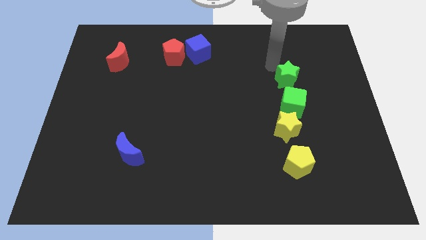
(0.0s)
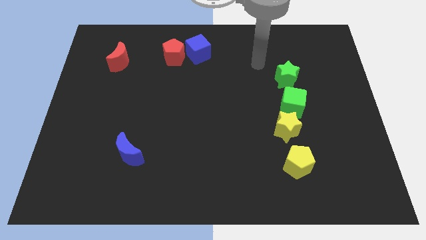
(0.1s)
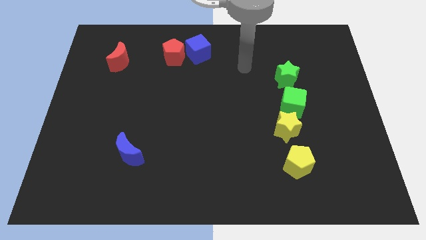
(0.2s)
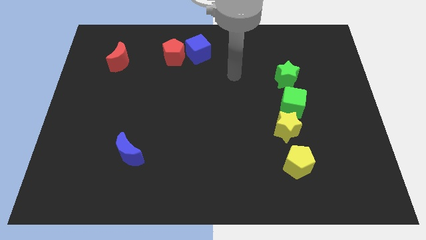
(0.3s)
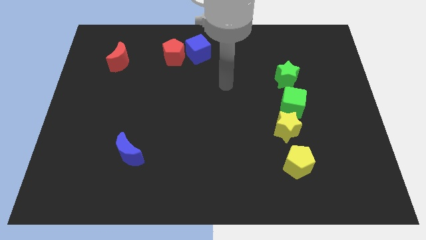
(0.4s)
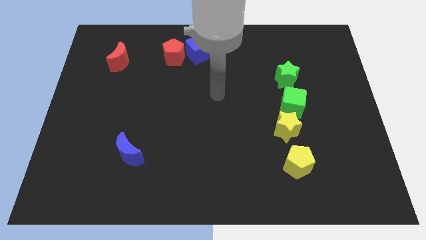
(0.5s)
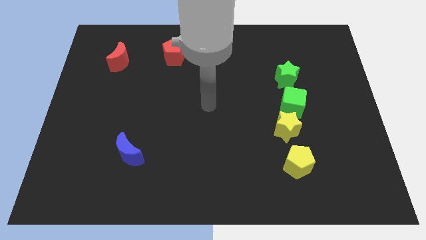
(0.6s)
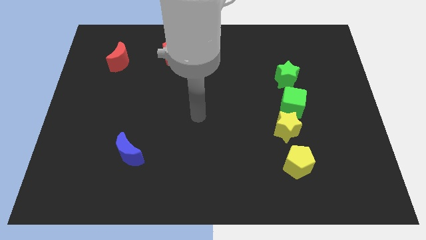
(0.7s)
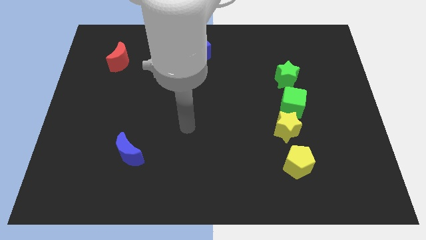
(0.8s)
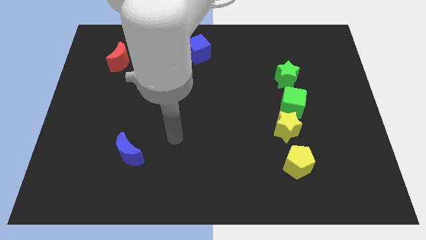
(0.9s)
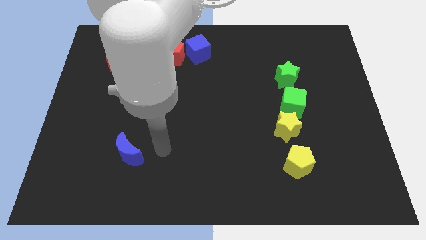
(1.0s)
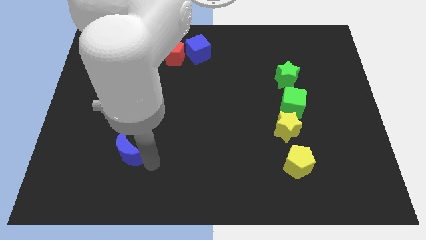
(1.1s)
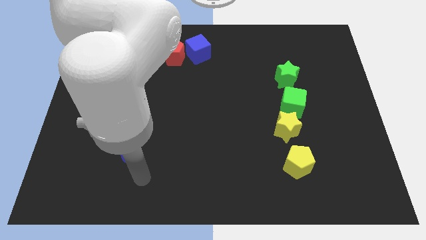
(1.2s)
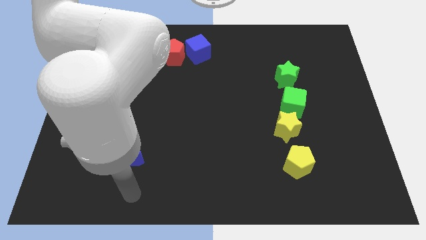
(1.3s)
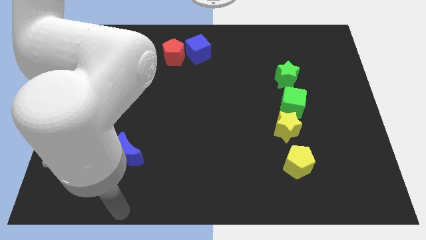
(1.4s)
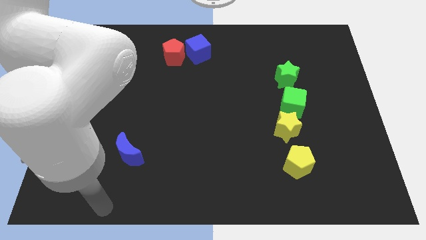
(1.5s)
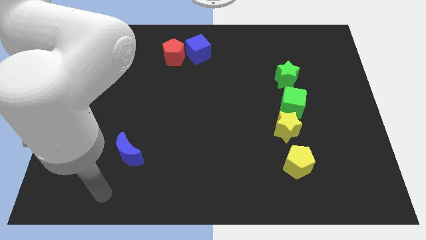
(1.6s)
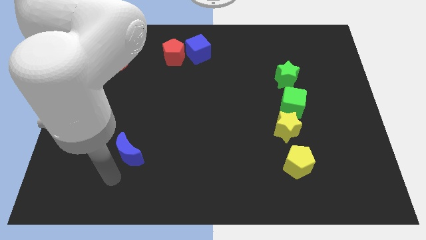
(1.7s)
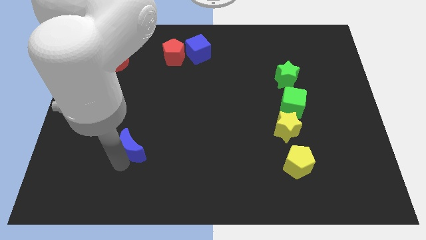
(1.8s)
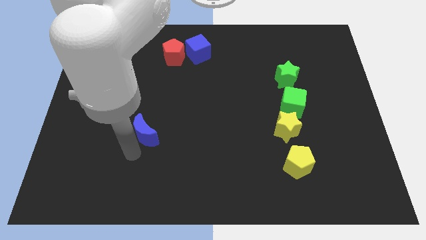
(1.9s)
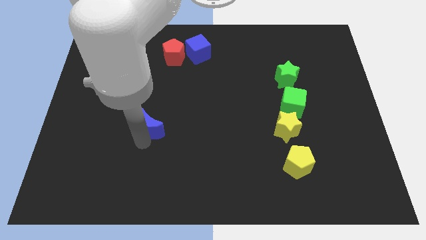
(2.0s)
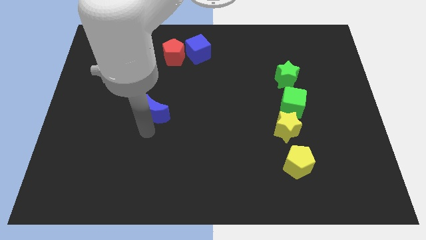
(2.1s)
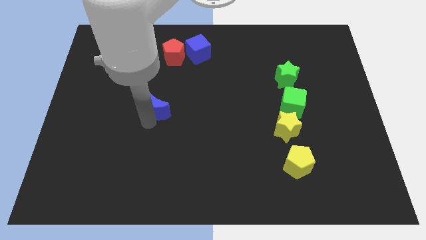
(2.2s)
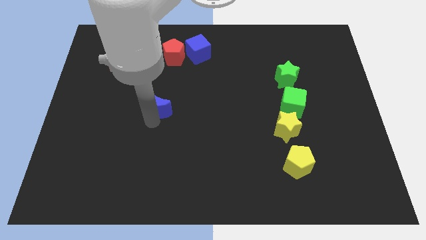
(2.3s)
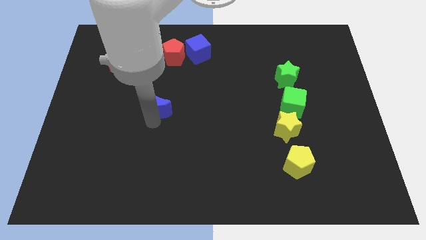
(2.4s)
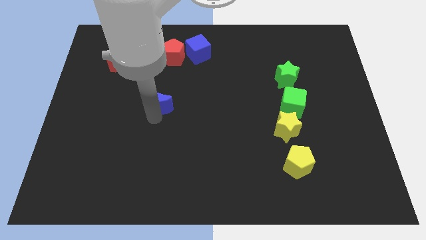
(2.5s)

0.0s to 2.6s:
push the blue moon below the red pentagon

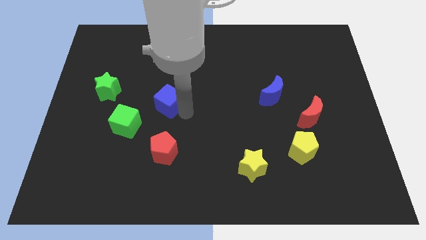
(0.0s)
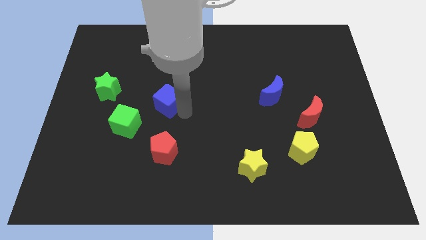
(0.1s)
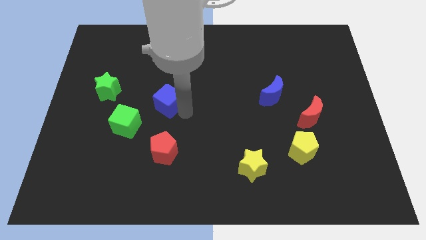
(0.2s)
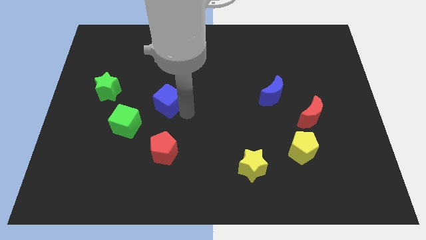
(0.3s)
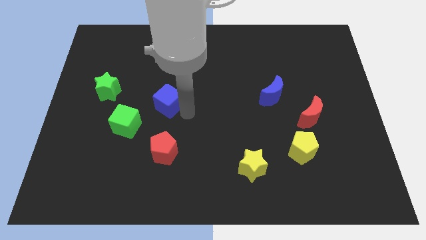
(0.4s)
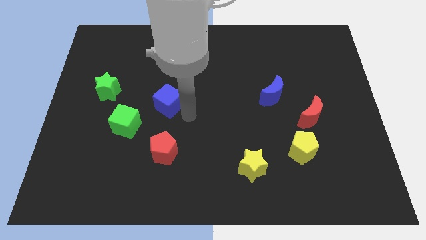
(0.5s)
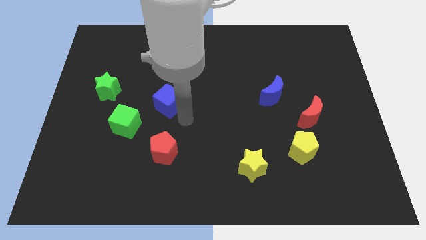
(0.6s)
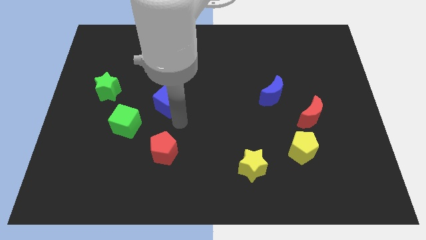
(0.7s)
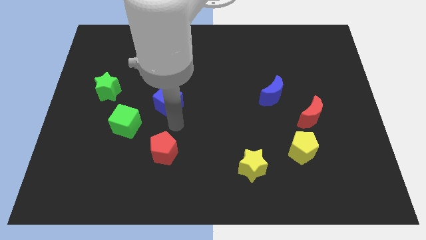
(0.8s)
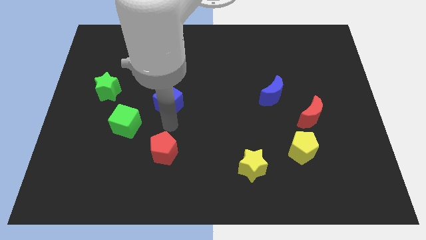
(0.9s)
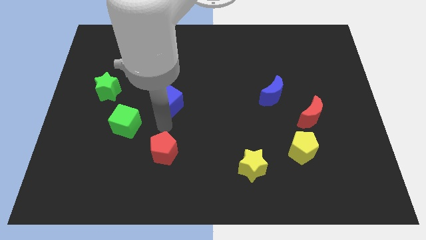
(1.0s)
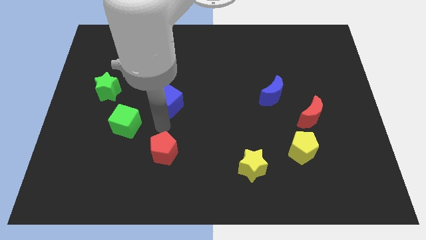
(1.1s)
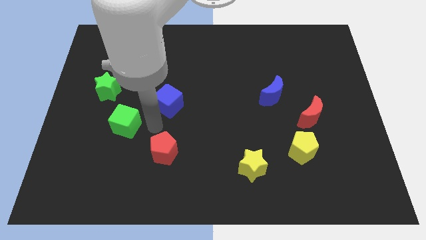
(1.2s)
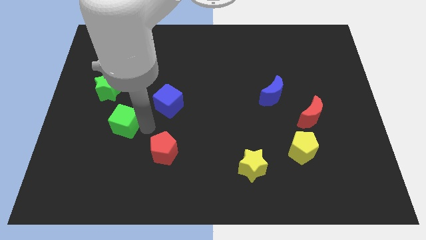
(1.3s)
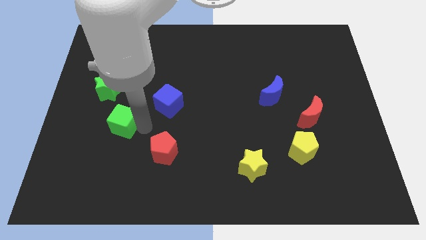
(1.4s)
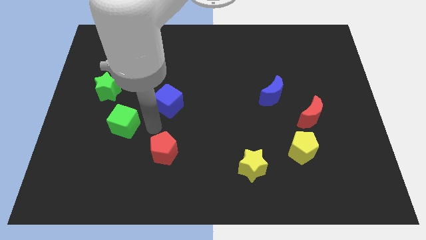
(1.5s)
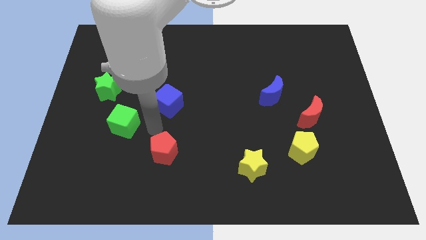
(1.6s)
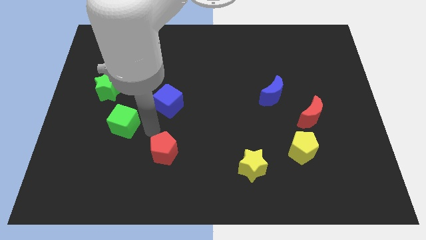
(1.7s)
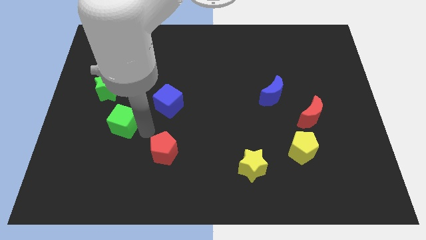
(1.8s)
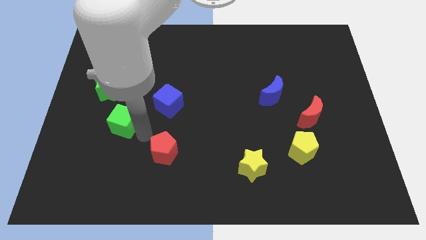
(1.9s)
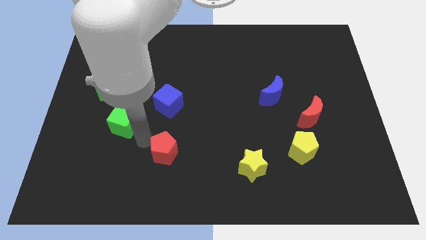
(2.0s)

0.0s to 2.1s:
tap on the left side of the green cube

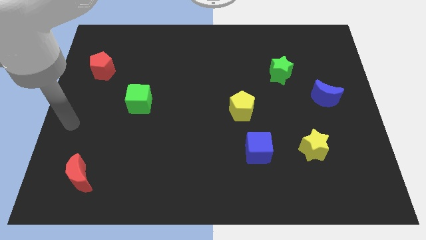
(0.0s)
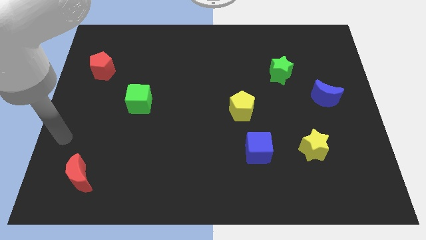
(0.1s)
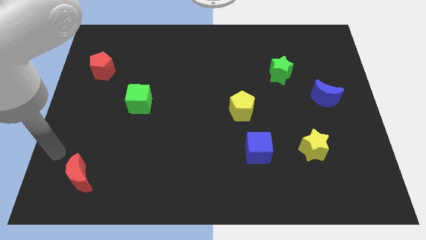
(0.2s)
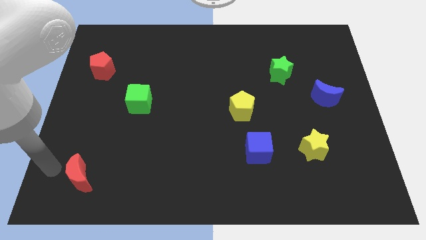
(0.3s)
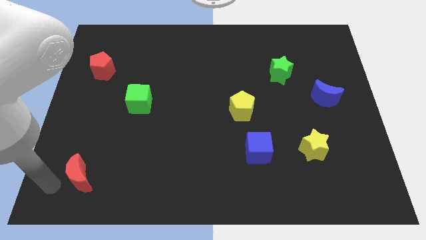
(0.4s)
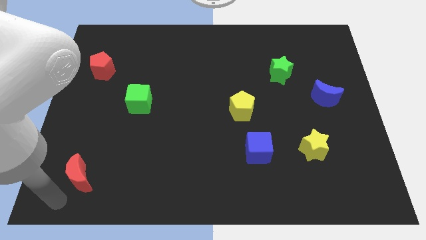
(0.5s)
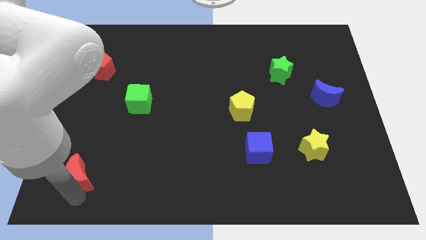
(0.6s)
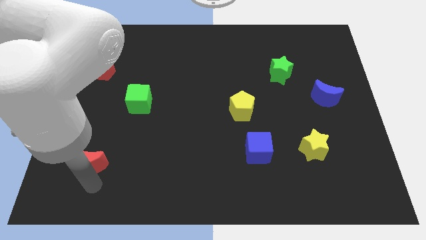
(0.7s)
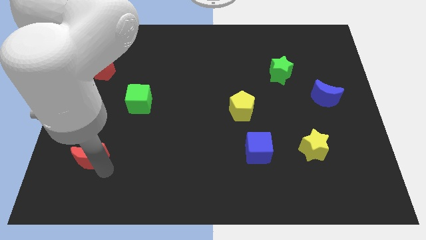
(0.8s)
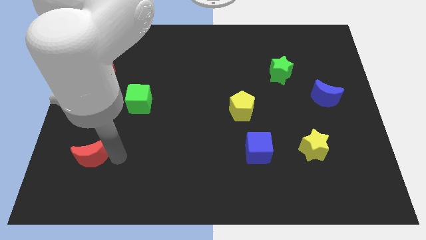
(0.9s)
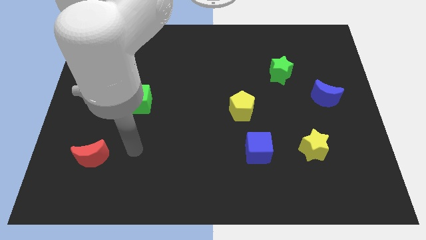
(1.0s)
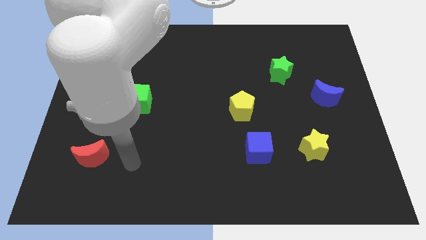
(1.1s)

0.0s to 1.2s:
slightly push the red crescent upwards of the board

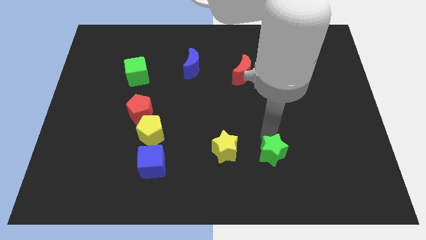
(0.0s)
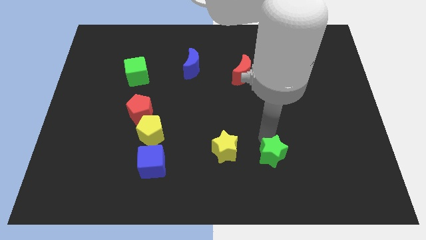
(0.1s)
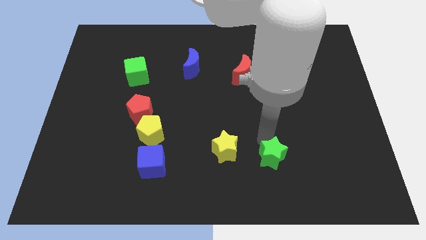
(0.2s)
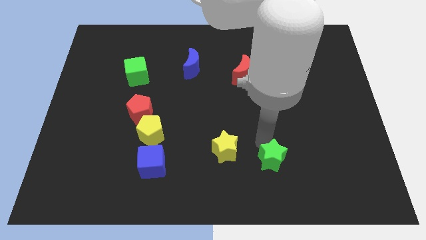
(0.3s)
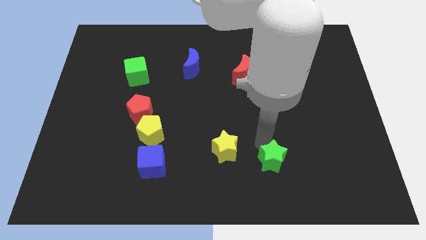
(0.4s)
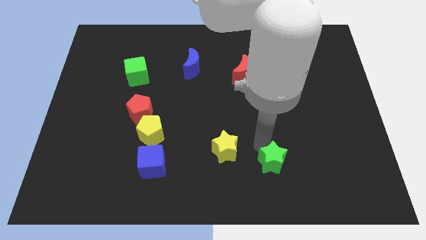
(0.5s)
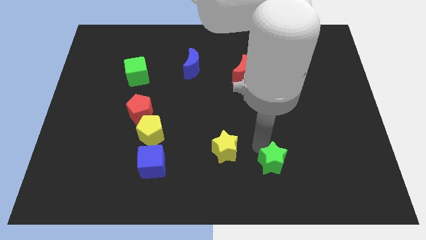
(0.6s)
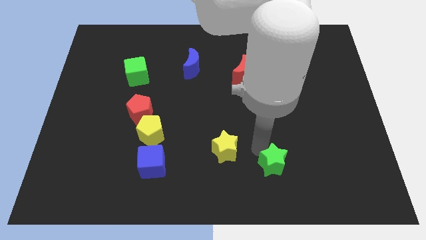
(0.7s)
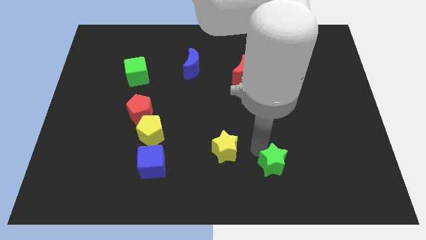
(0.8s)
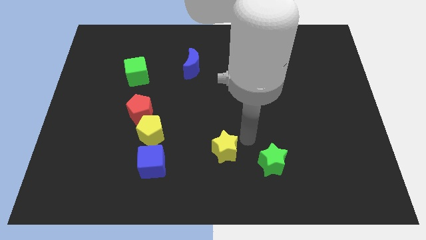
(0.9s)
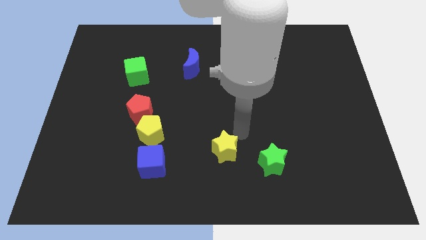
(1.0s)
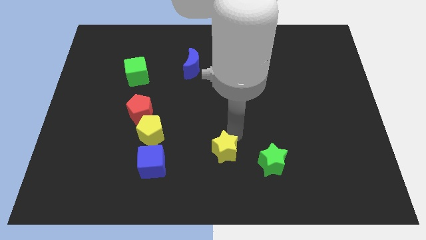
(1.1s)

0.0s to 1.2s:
slightly push the green star downward

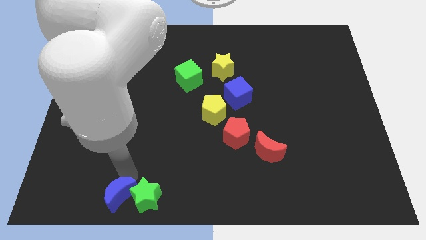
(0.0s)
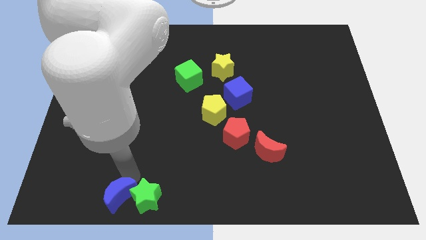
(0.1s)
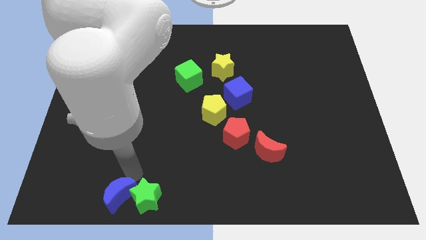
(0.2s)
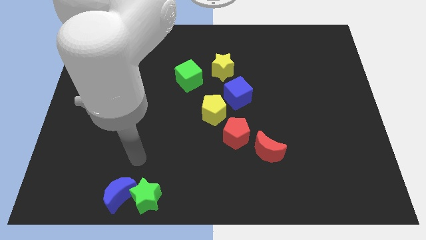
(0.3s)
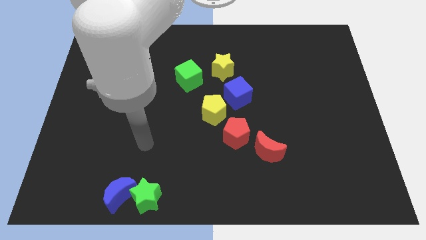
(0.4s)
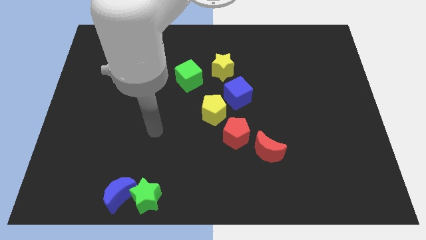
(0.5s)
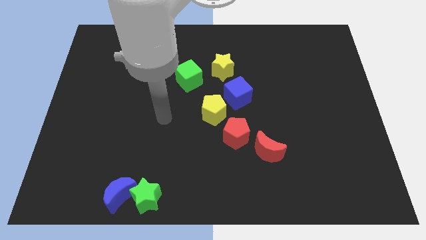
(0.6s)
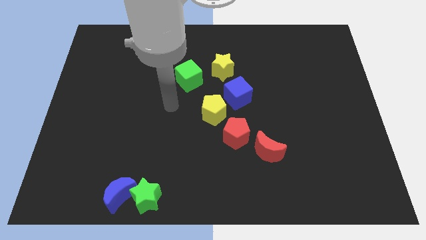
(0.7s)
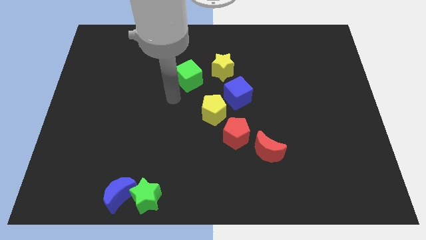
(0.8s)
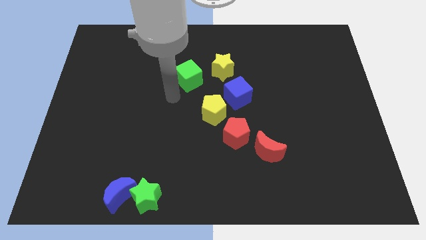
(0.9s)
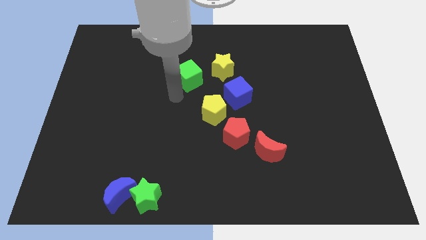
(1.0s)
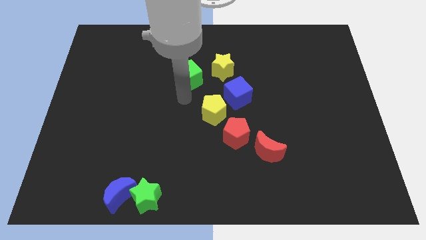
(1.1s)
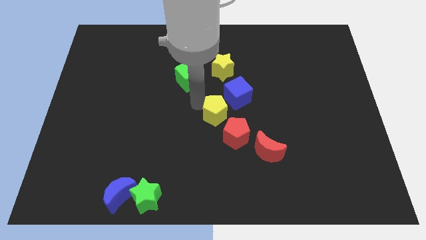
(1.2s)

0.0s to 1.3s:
move the arm below the green cube

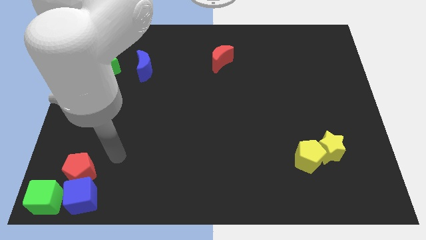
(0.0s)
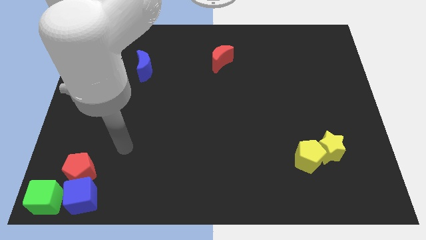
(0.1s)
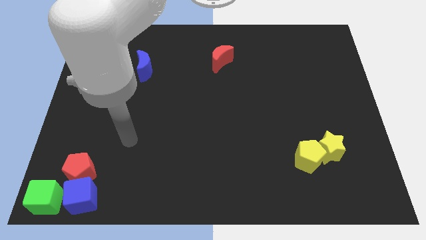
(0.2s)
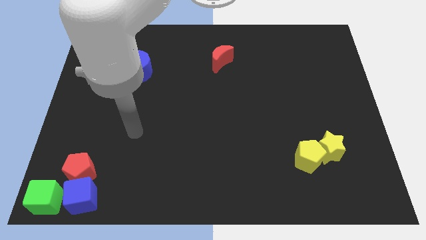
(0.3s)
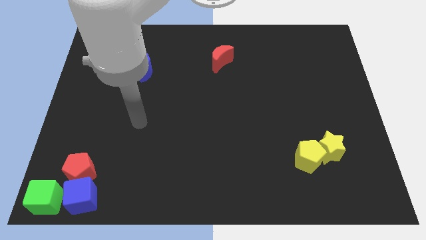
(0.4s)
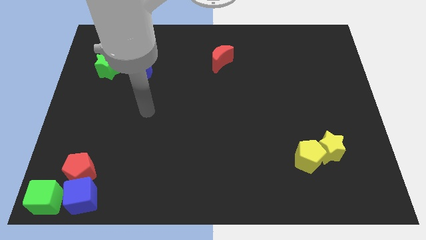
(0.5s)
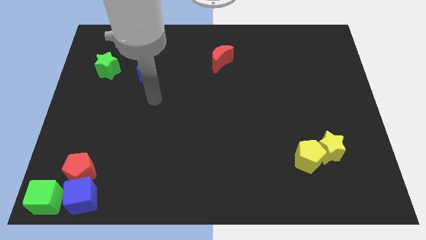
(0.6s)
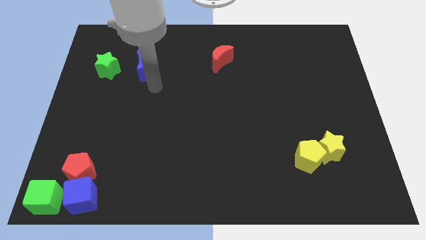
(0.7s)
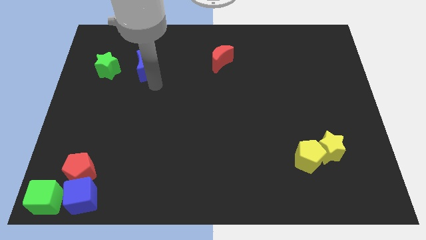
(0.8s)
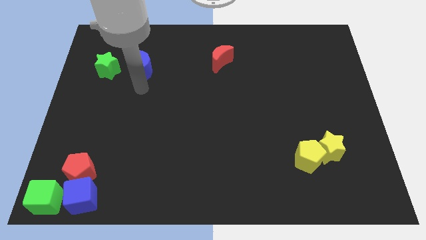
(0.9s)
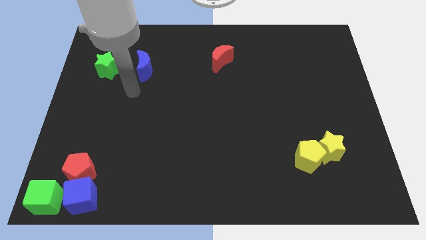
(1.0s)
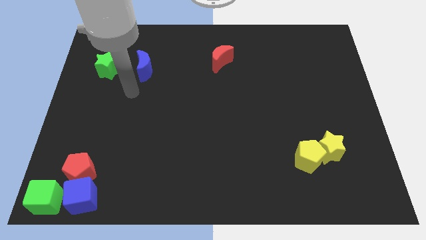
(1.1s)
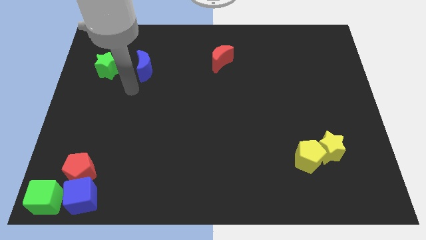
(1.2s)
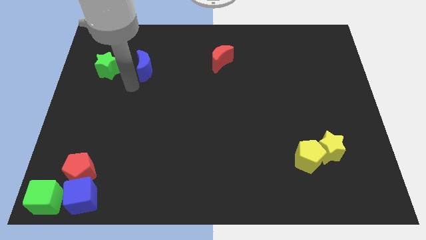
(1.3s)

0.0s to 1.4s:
move your arm towards the blue crescent
